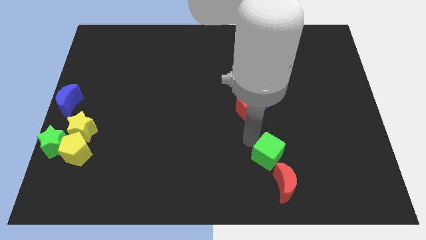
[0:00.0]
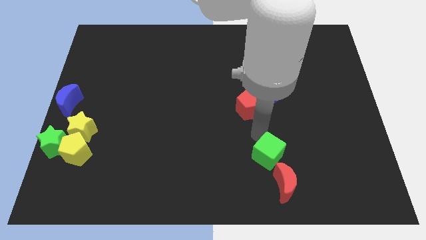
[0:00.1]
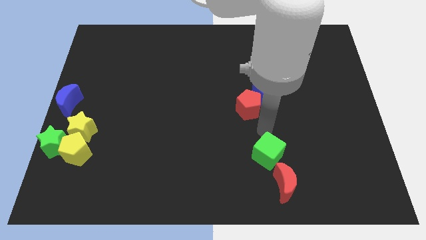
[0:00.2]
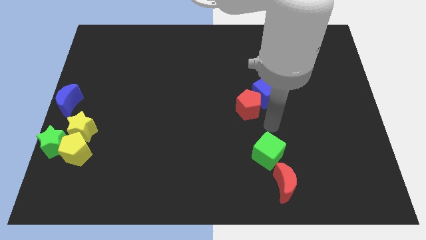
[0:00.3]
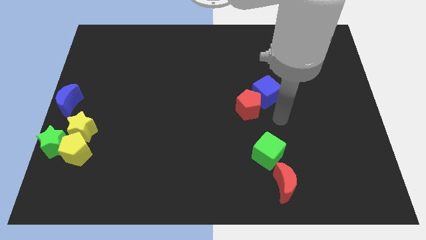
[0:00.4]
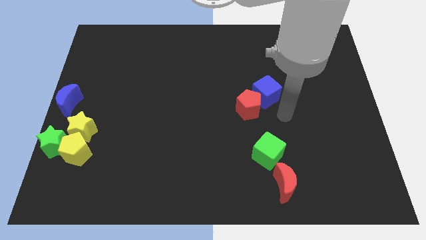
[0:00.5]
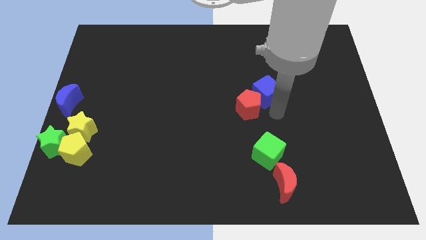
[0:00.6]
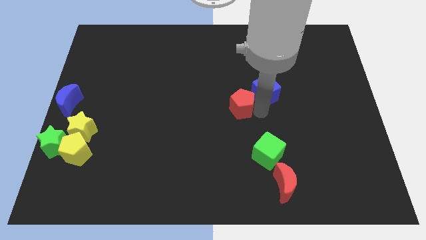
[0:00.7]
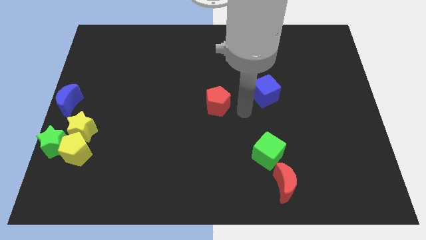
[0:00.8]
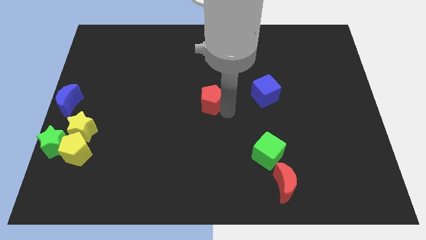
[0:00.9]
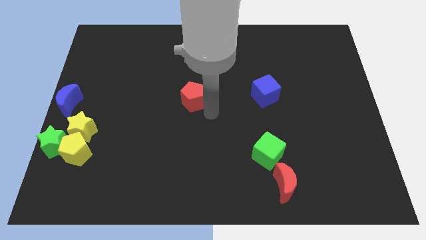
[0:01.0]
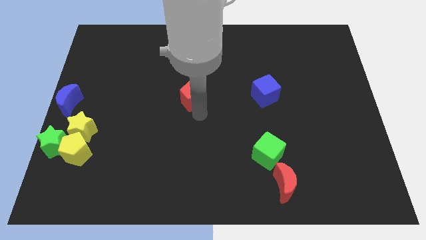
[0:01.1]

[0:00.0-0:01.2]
move the red pentagon between blue moon and blue cube

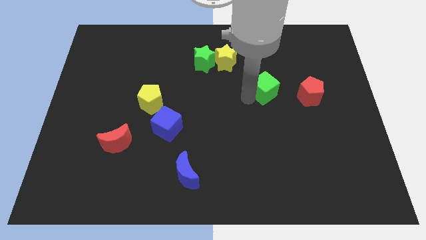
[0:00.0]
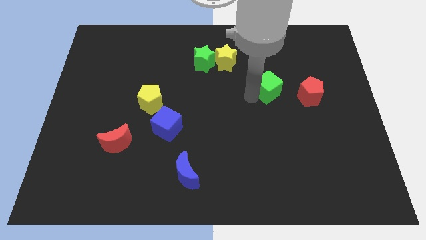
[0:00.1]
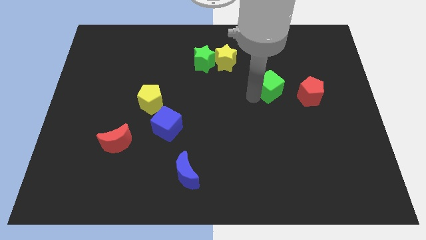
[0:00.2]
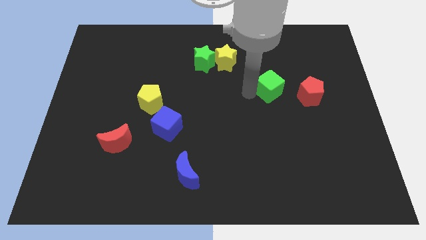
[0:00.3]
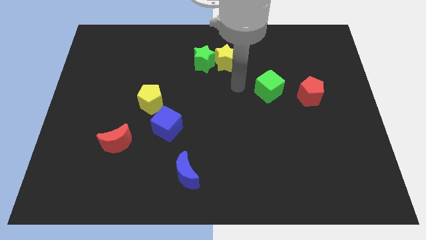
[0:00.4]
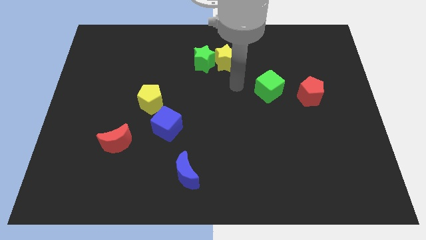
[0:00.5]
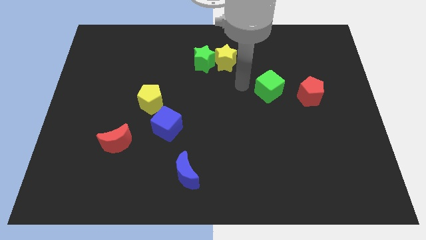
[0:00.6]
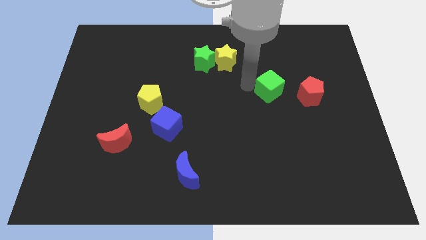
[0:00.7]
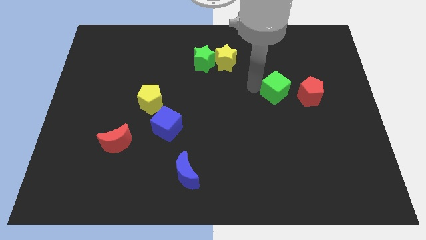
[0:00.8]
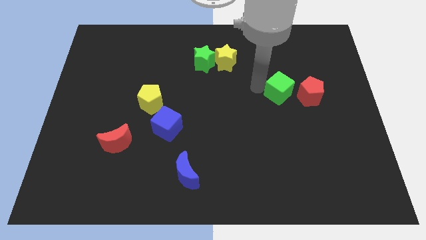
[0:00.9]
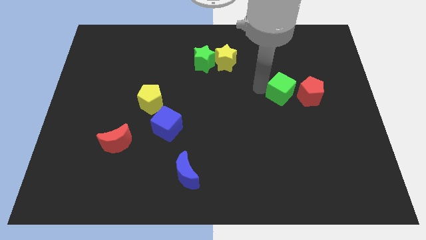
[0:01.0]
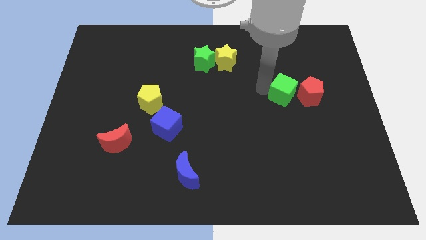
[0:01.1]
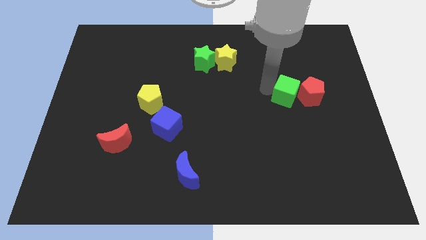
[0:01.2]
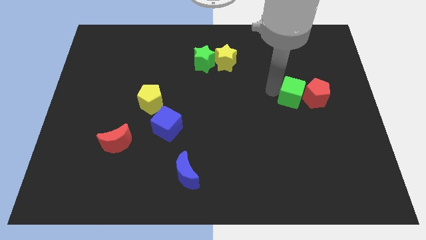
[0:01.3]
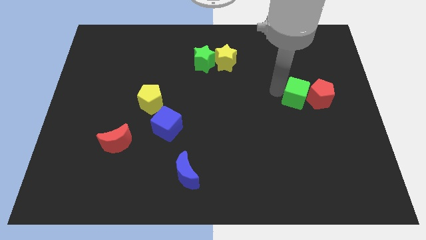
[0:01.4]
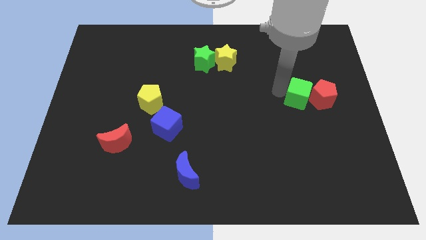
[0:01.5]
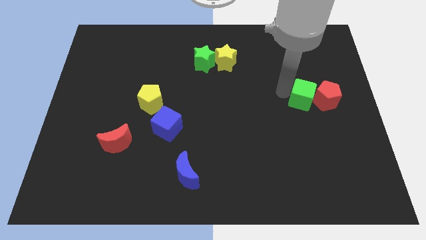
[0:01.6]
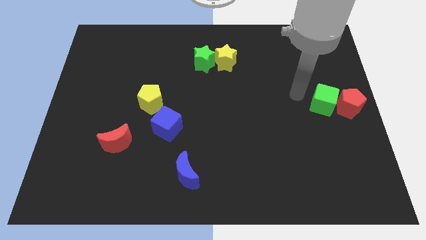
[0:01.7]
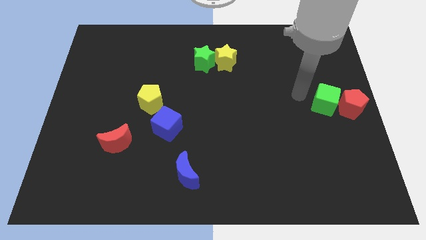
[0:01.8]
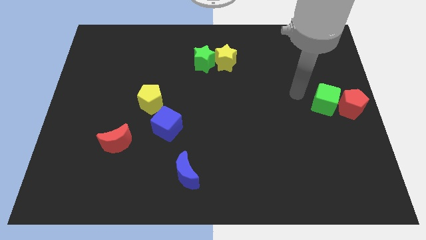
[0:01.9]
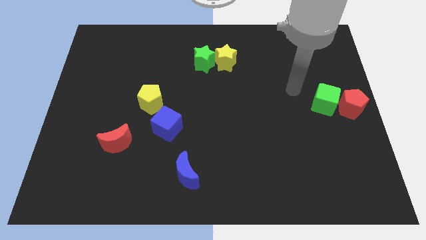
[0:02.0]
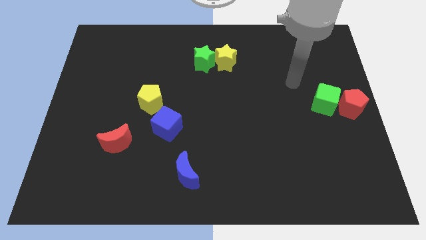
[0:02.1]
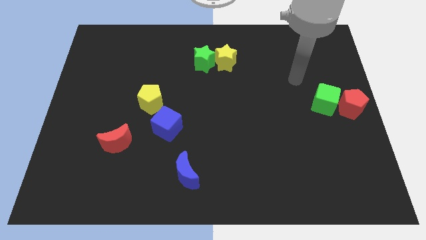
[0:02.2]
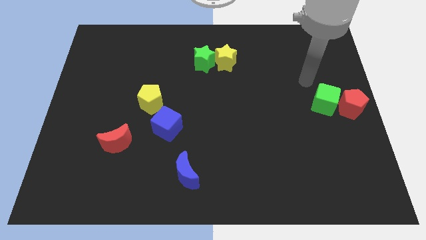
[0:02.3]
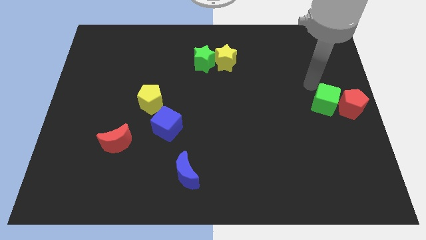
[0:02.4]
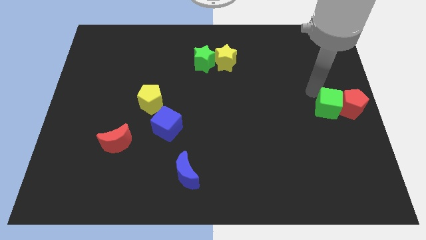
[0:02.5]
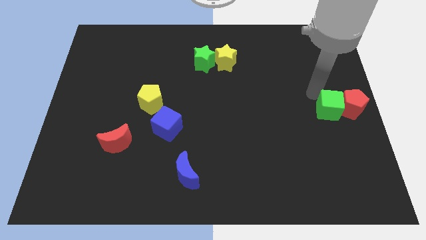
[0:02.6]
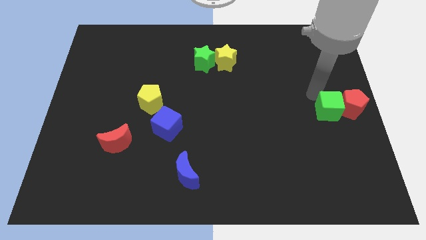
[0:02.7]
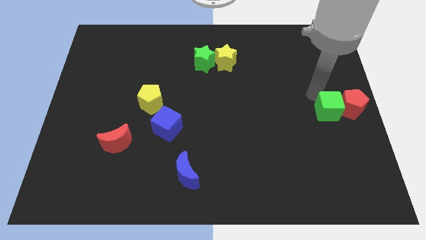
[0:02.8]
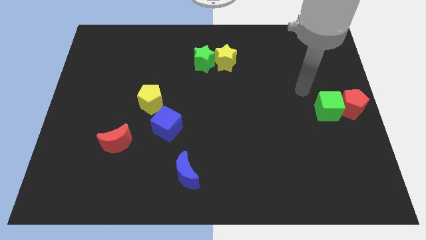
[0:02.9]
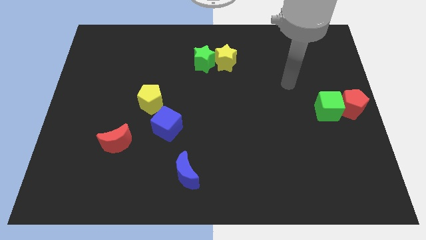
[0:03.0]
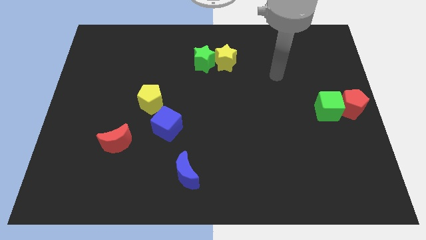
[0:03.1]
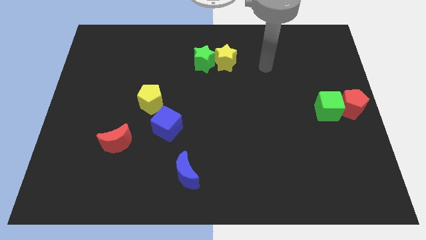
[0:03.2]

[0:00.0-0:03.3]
put the green cube and red pentagon at the center left of the table

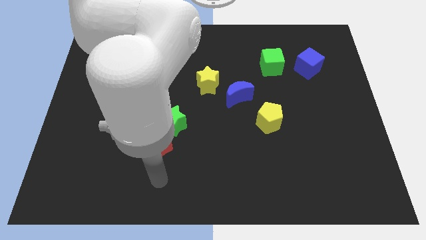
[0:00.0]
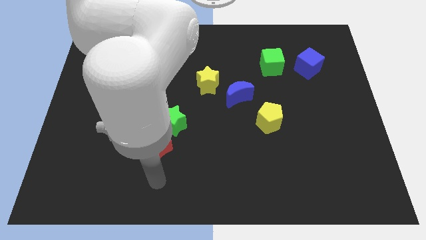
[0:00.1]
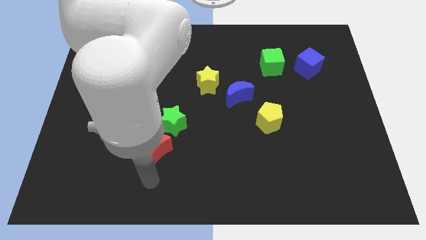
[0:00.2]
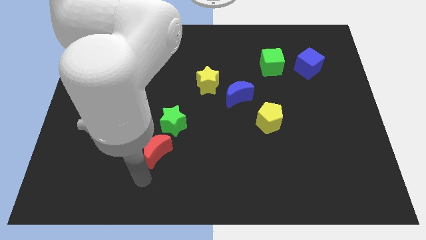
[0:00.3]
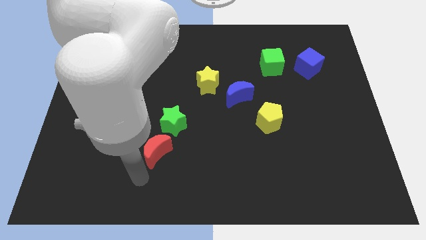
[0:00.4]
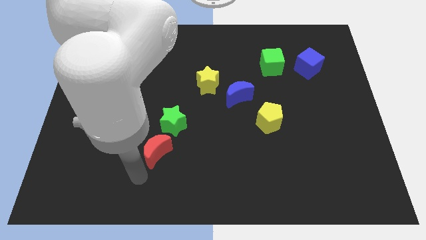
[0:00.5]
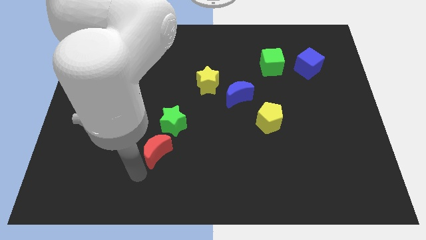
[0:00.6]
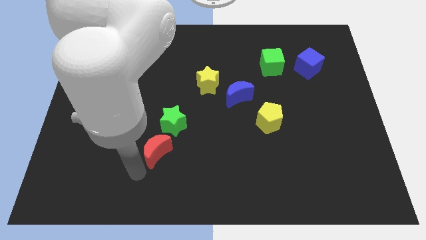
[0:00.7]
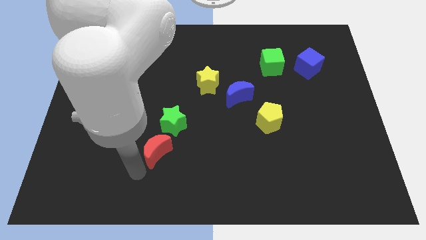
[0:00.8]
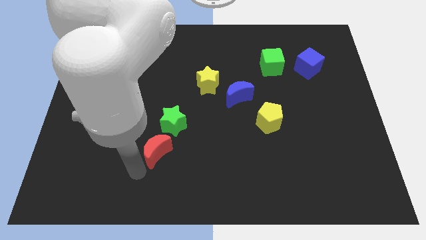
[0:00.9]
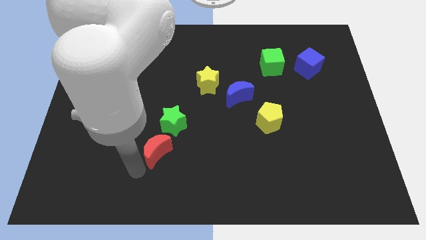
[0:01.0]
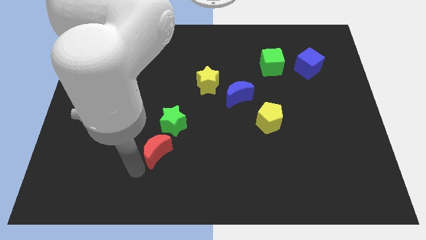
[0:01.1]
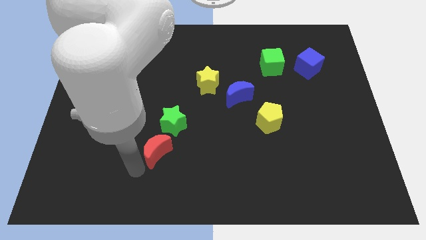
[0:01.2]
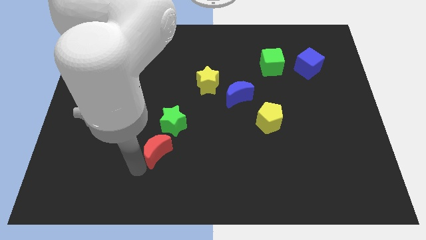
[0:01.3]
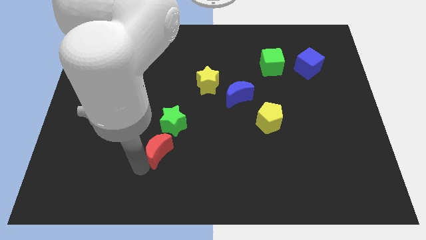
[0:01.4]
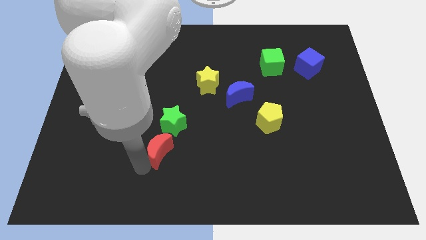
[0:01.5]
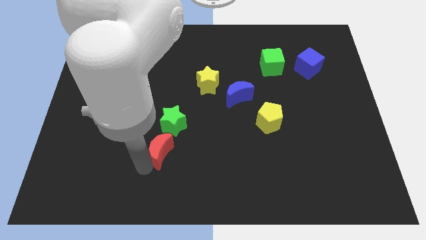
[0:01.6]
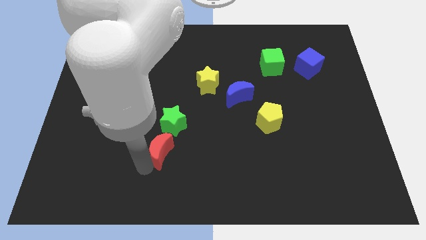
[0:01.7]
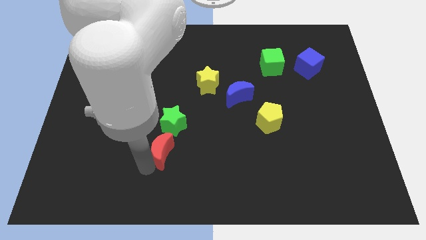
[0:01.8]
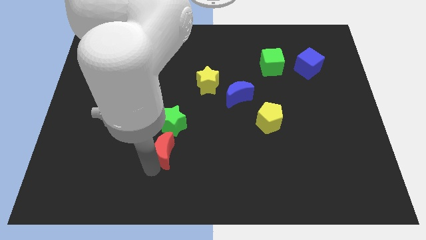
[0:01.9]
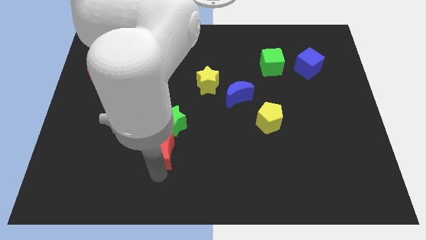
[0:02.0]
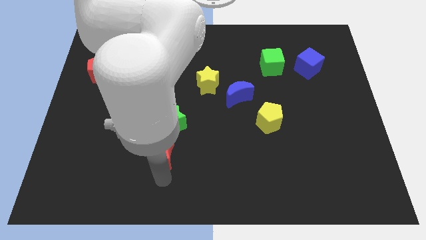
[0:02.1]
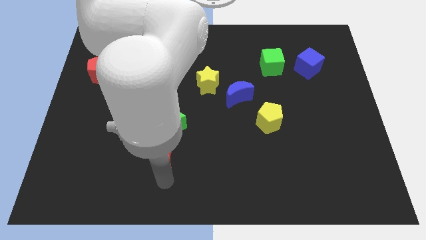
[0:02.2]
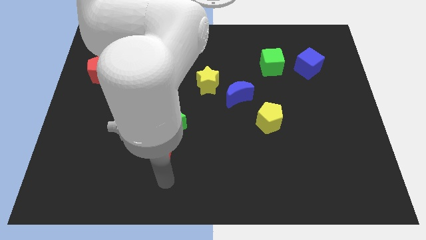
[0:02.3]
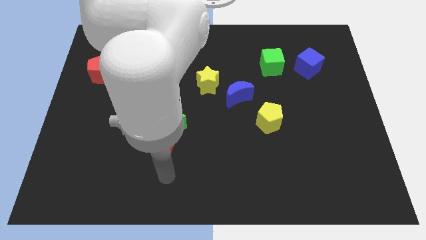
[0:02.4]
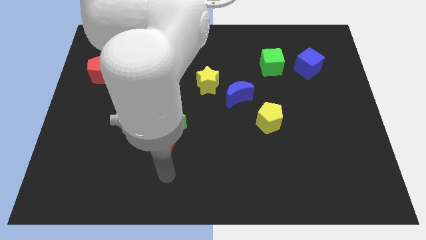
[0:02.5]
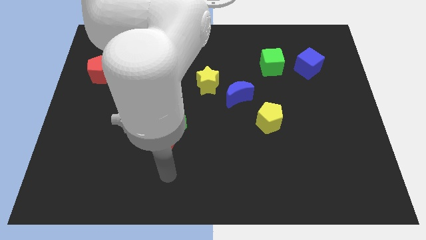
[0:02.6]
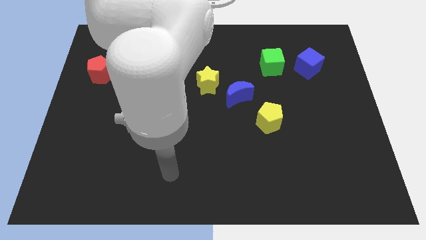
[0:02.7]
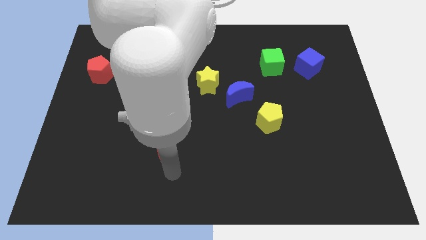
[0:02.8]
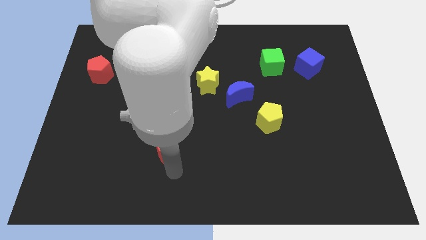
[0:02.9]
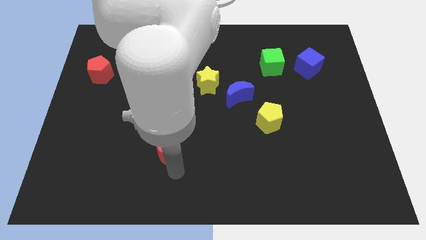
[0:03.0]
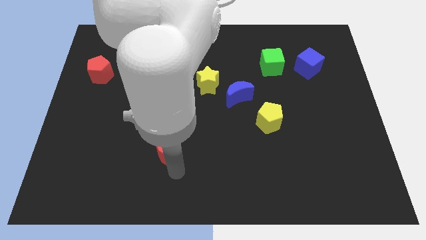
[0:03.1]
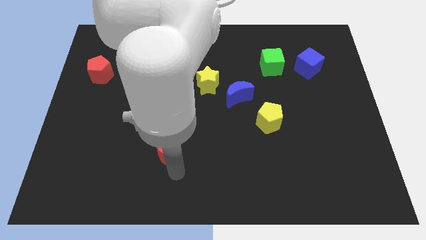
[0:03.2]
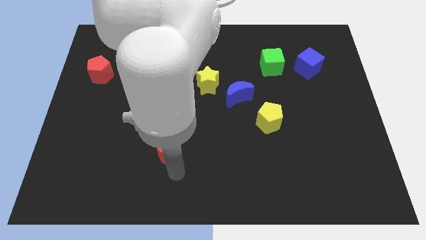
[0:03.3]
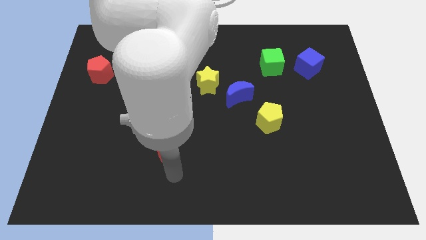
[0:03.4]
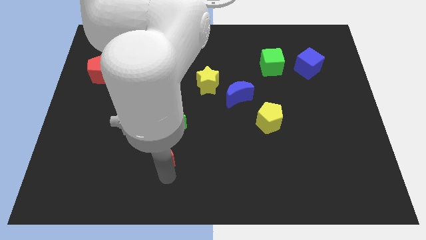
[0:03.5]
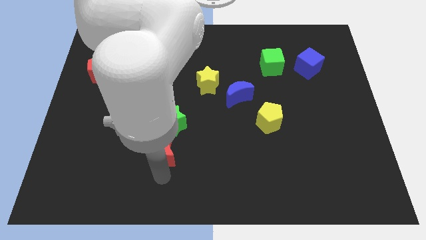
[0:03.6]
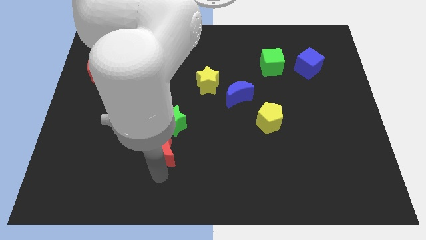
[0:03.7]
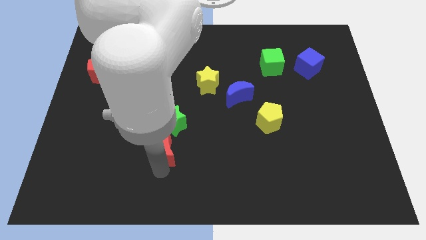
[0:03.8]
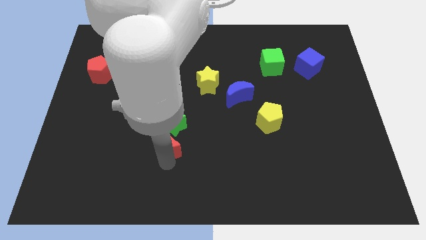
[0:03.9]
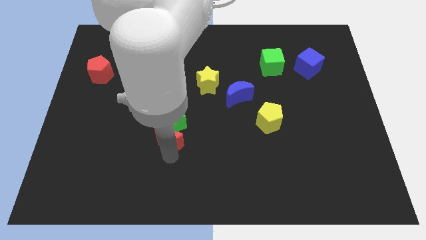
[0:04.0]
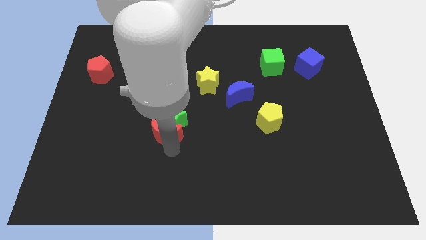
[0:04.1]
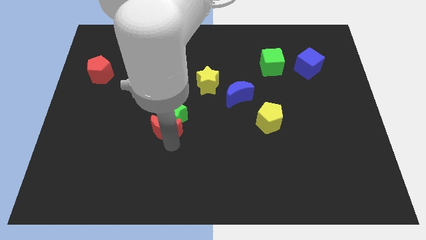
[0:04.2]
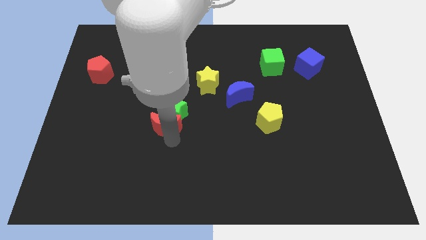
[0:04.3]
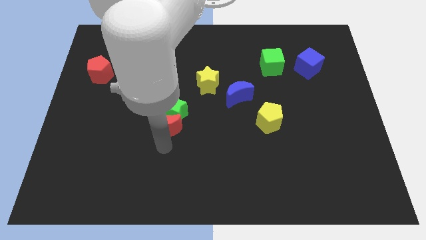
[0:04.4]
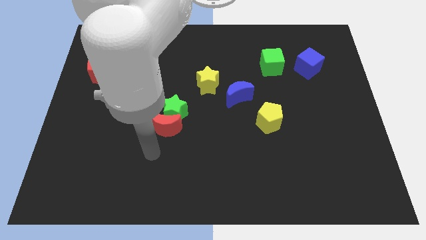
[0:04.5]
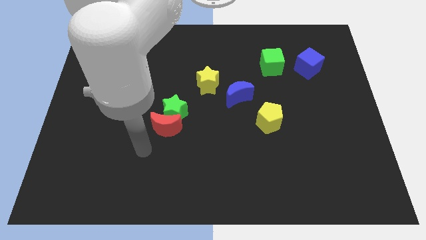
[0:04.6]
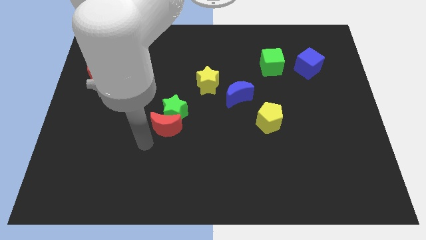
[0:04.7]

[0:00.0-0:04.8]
slide red moon into green star
